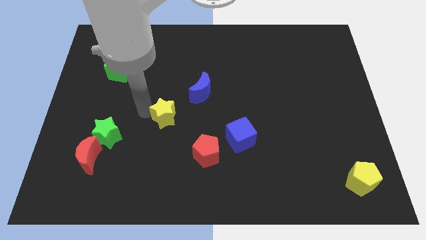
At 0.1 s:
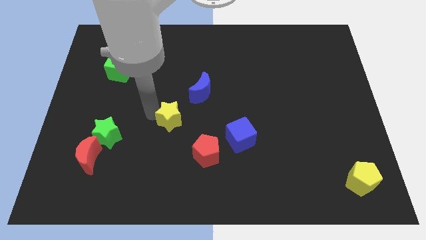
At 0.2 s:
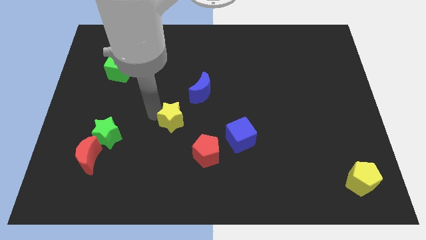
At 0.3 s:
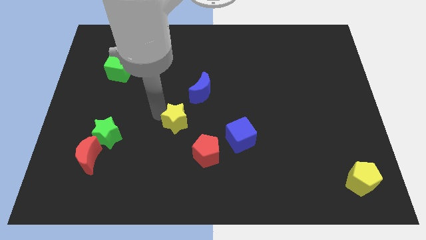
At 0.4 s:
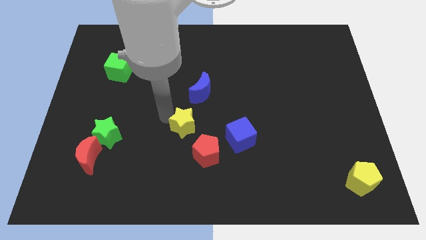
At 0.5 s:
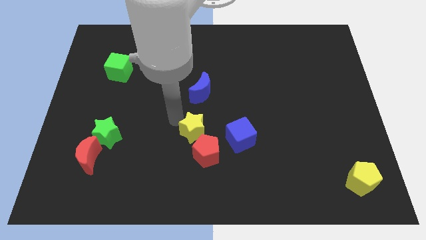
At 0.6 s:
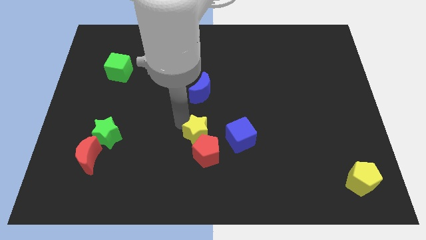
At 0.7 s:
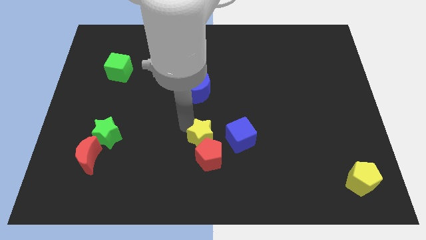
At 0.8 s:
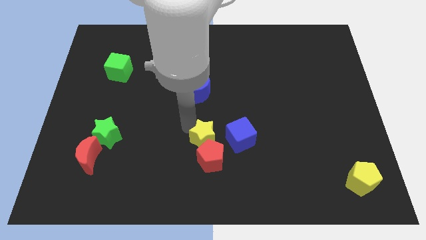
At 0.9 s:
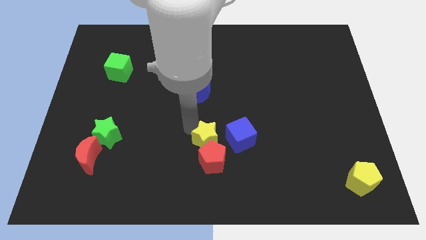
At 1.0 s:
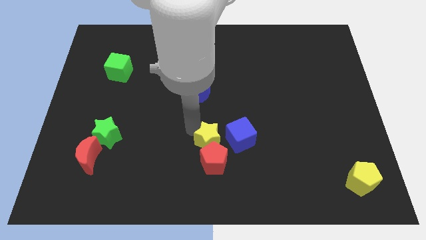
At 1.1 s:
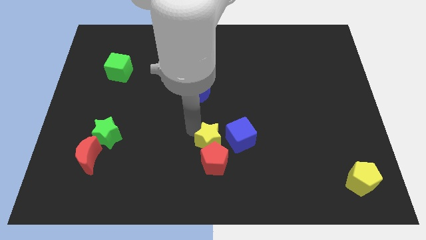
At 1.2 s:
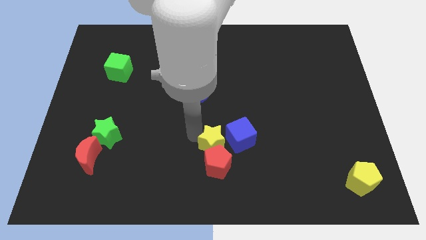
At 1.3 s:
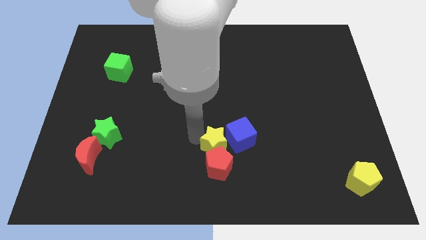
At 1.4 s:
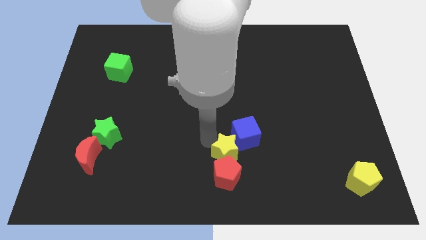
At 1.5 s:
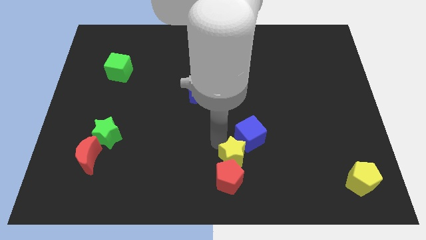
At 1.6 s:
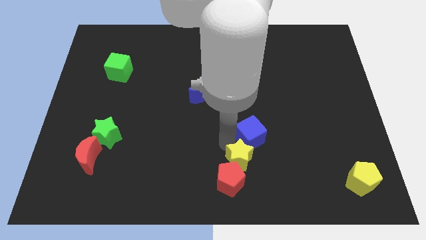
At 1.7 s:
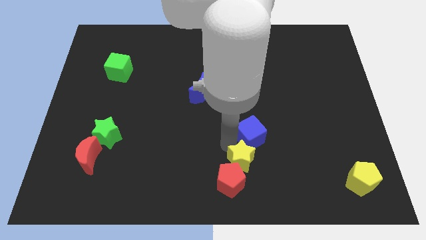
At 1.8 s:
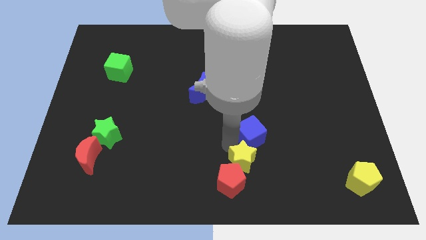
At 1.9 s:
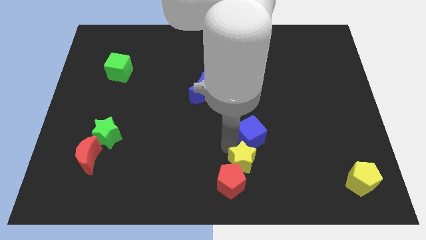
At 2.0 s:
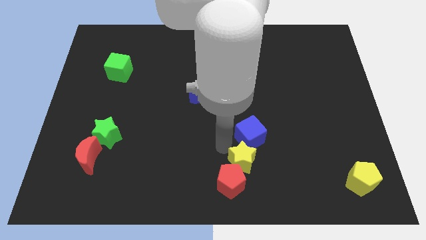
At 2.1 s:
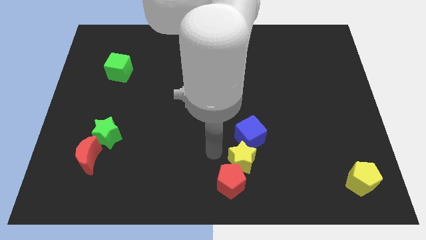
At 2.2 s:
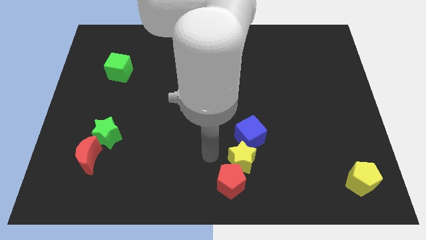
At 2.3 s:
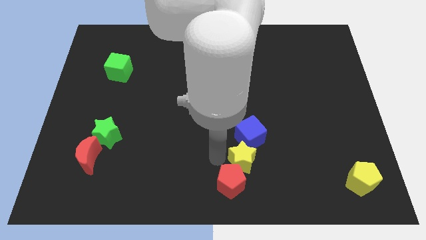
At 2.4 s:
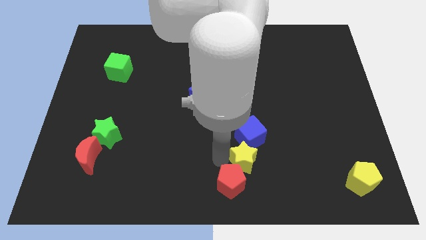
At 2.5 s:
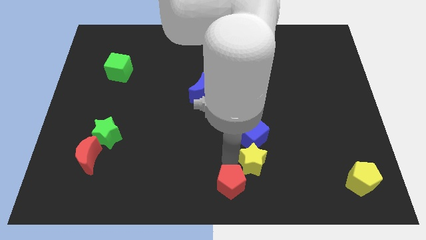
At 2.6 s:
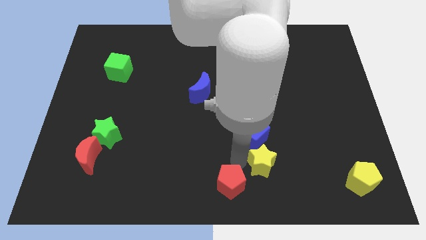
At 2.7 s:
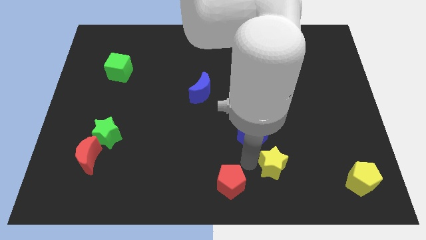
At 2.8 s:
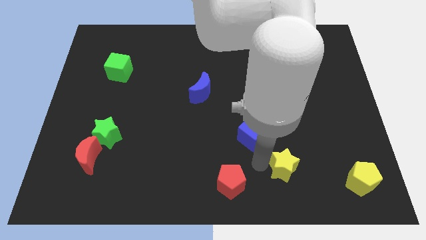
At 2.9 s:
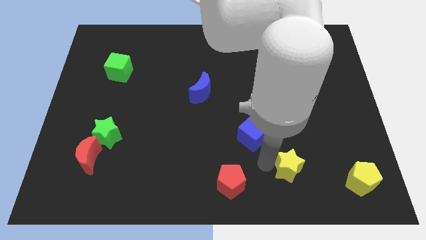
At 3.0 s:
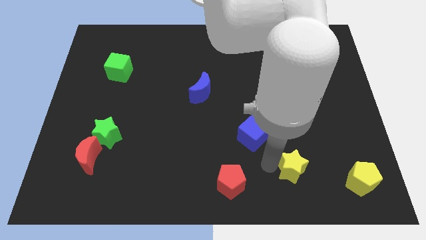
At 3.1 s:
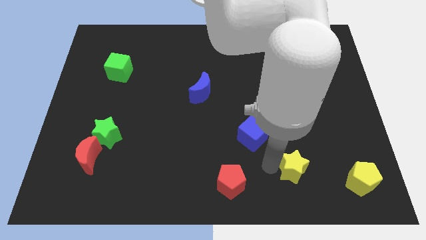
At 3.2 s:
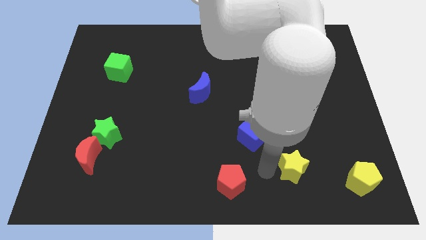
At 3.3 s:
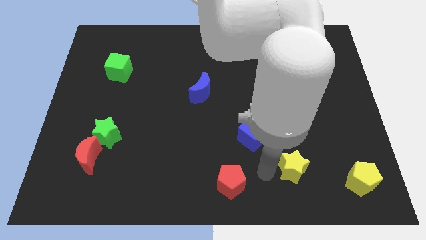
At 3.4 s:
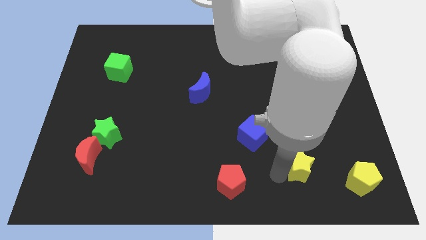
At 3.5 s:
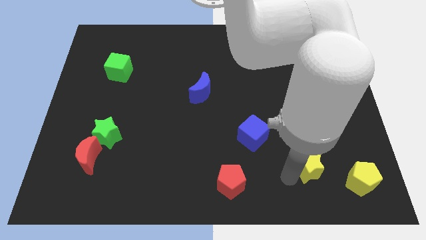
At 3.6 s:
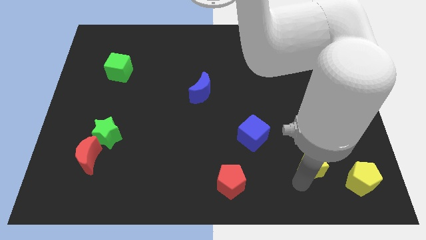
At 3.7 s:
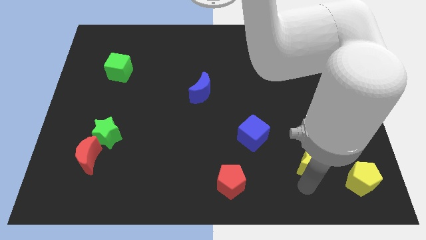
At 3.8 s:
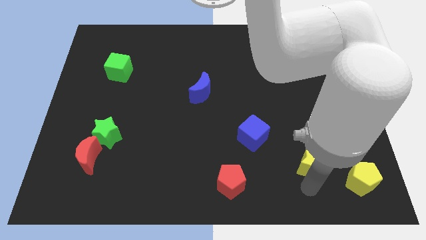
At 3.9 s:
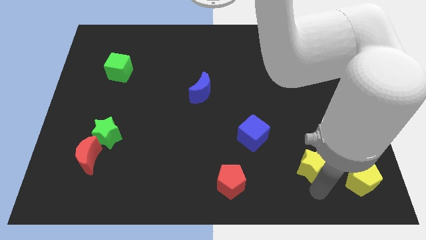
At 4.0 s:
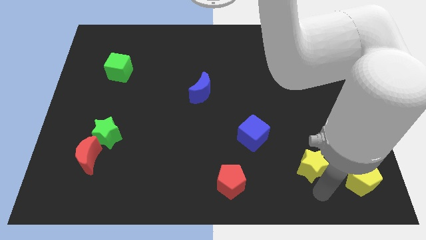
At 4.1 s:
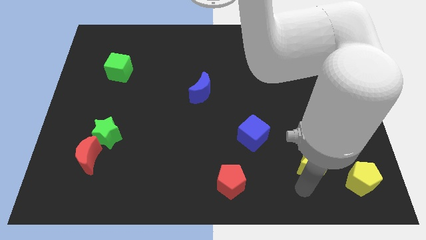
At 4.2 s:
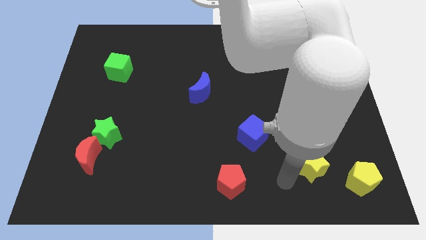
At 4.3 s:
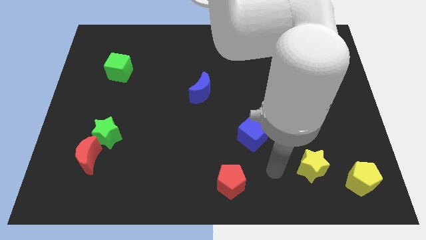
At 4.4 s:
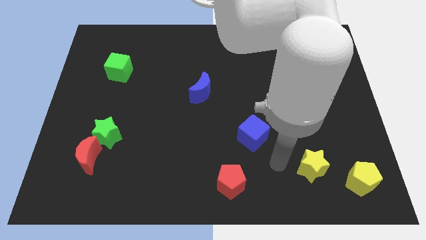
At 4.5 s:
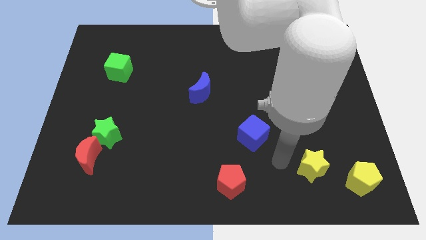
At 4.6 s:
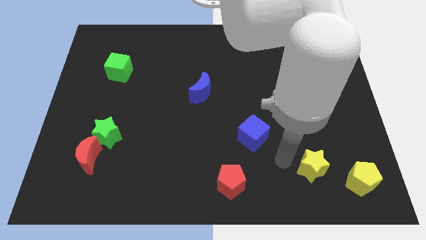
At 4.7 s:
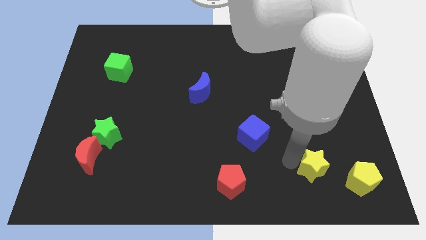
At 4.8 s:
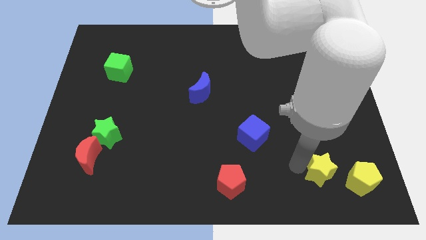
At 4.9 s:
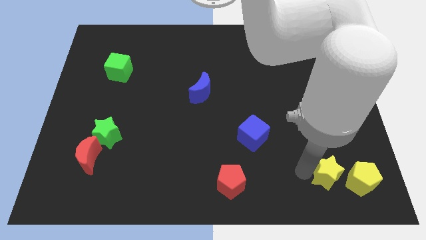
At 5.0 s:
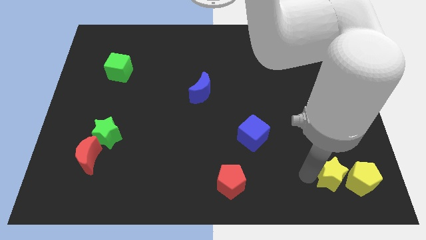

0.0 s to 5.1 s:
move the yellow star to the yellow pentagon

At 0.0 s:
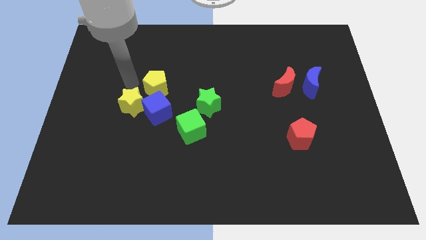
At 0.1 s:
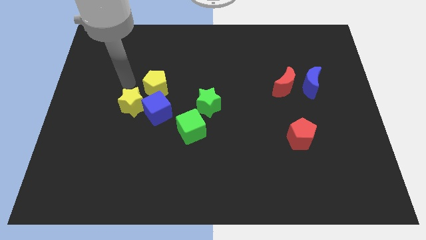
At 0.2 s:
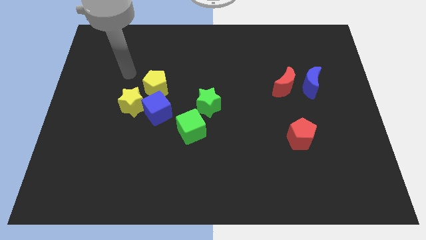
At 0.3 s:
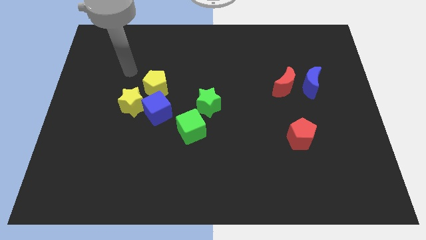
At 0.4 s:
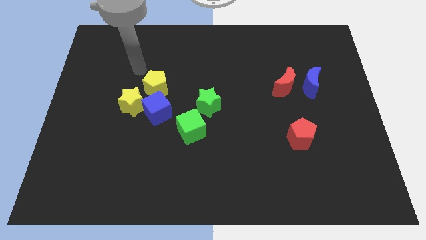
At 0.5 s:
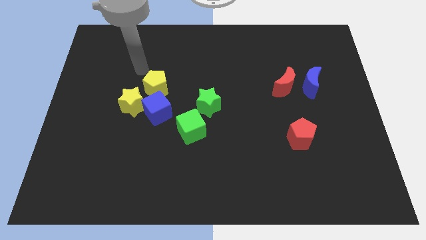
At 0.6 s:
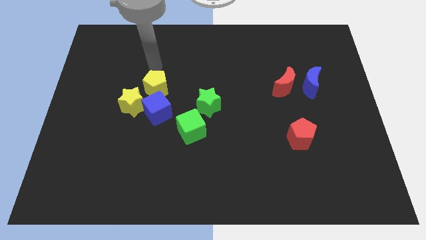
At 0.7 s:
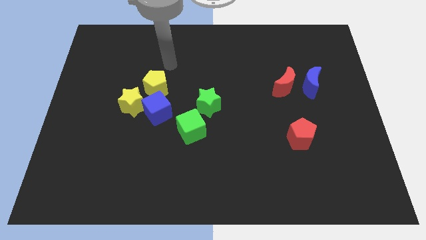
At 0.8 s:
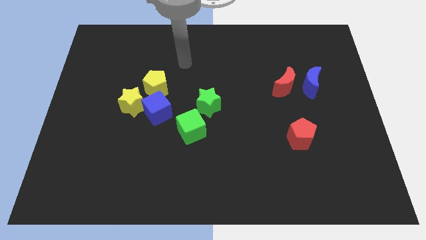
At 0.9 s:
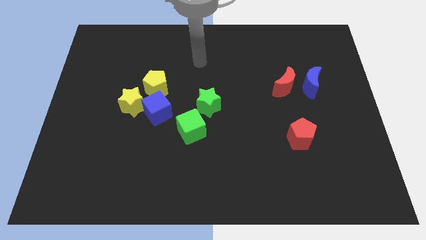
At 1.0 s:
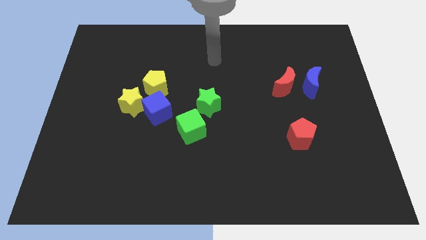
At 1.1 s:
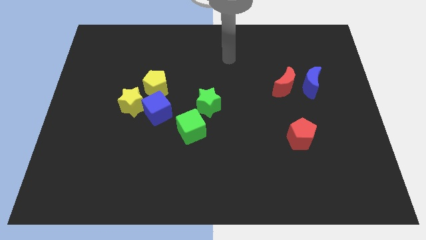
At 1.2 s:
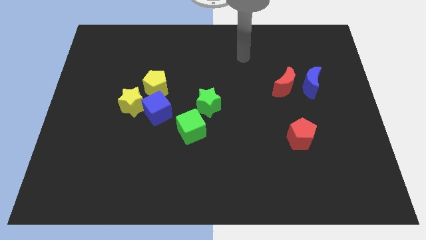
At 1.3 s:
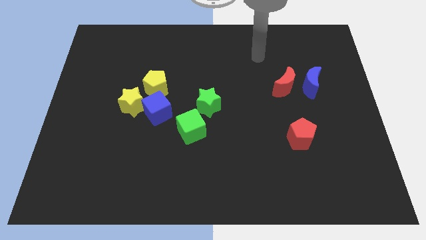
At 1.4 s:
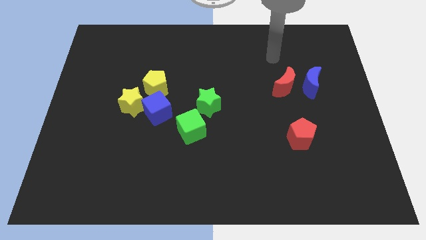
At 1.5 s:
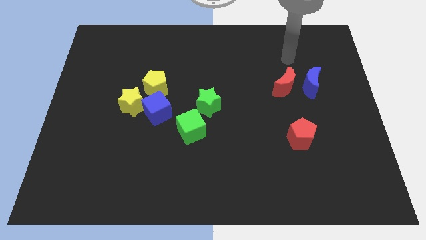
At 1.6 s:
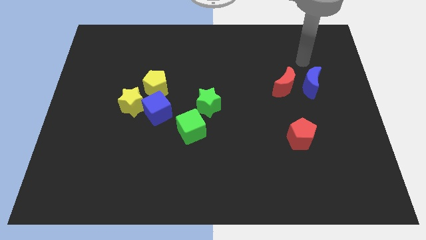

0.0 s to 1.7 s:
move away from the yellow pentagon

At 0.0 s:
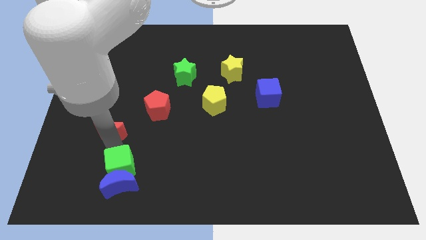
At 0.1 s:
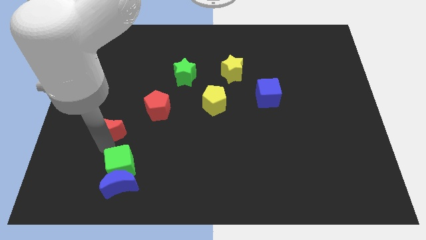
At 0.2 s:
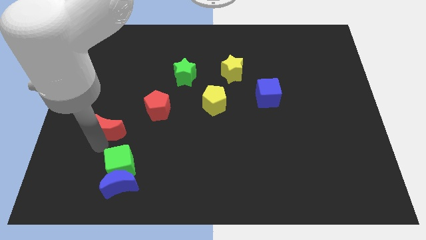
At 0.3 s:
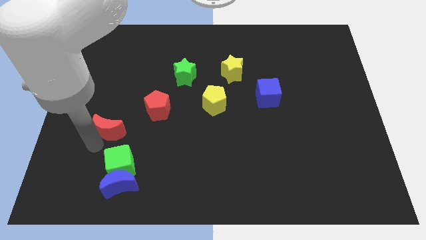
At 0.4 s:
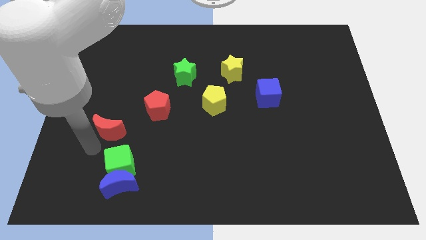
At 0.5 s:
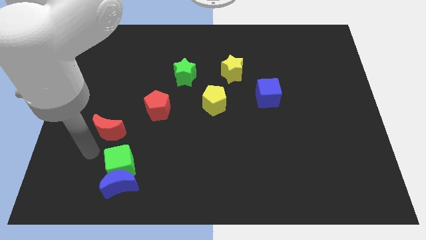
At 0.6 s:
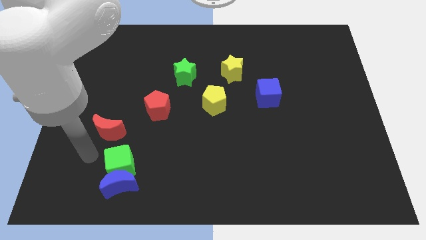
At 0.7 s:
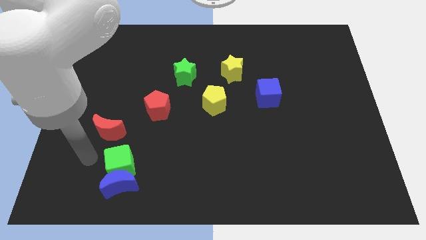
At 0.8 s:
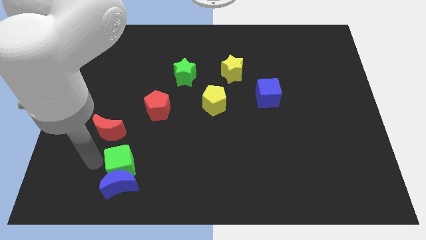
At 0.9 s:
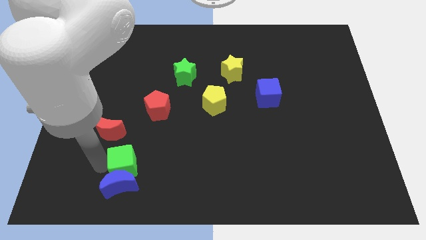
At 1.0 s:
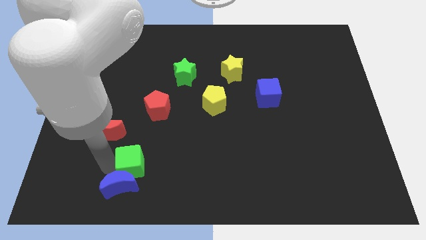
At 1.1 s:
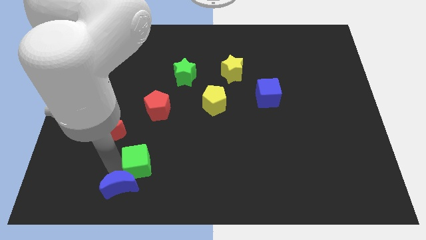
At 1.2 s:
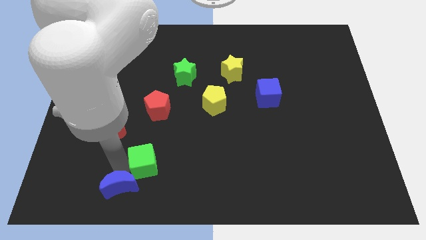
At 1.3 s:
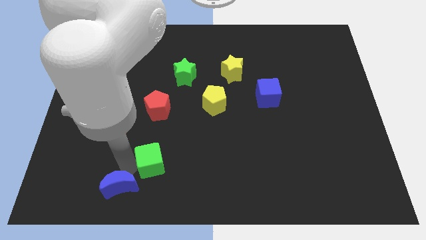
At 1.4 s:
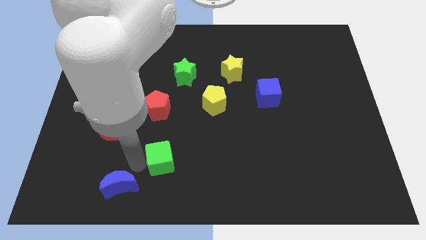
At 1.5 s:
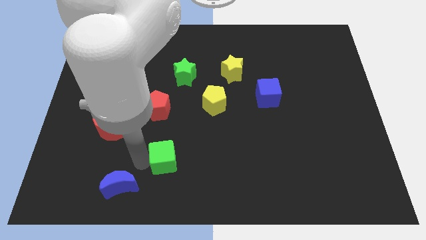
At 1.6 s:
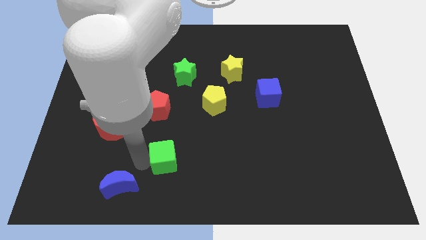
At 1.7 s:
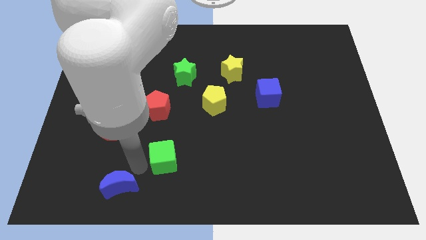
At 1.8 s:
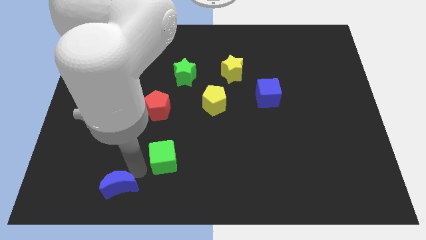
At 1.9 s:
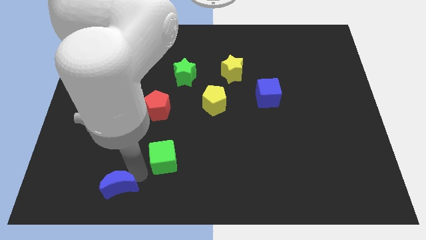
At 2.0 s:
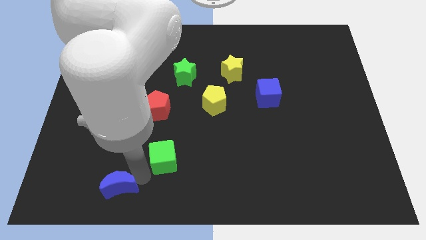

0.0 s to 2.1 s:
push the green cube slightly to the right
